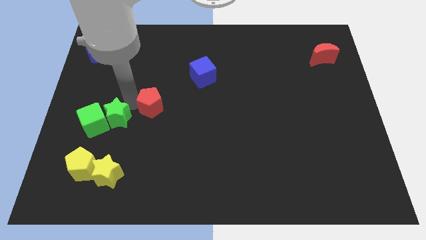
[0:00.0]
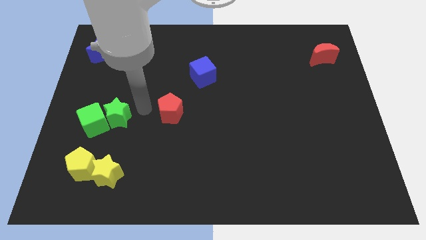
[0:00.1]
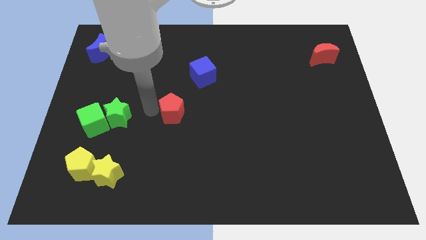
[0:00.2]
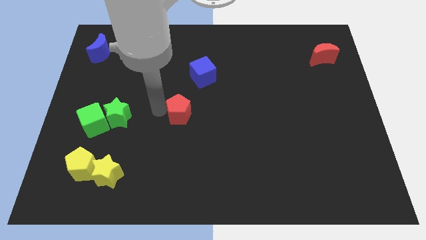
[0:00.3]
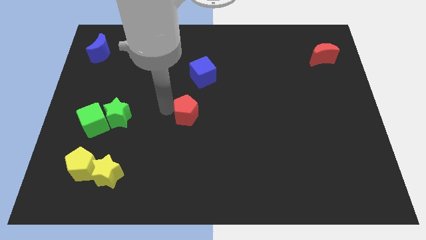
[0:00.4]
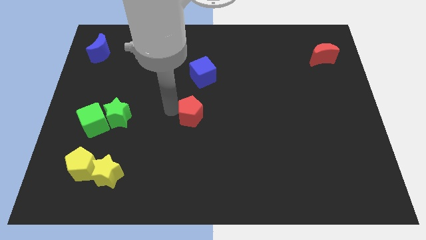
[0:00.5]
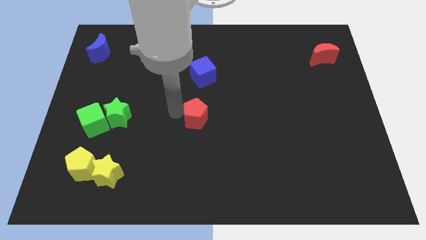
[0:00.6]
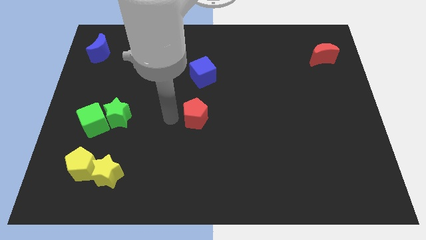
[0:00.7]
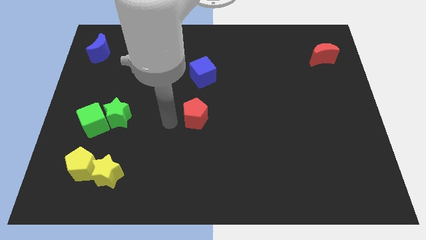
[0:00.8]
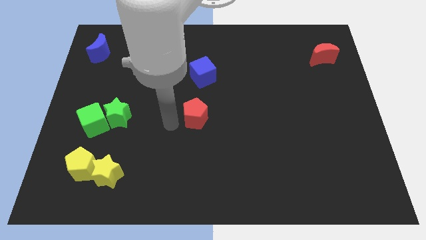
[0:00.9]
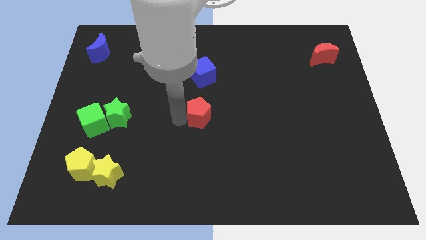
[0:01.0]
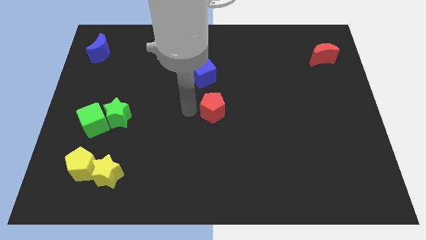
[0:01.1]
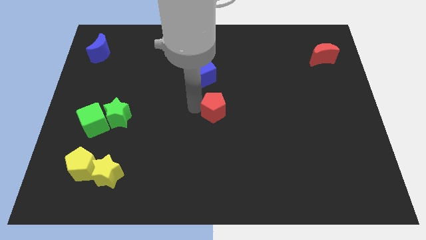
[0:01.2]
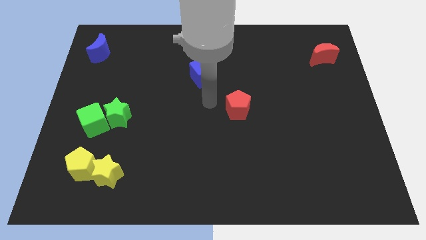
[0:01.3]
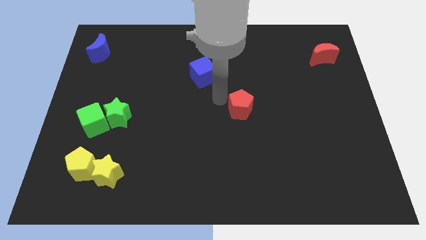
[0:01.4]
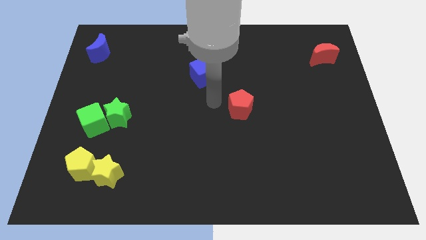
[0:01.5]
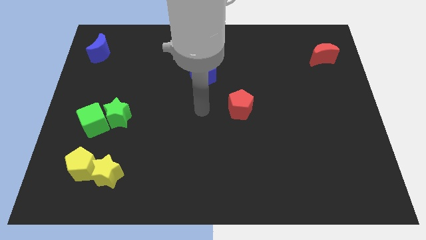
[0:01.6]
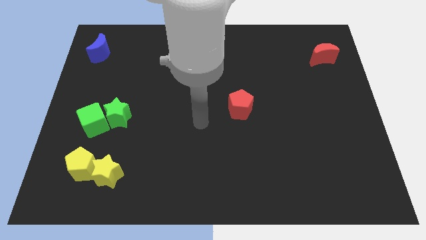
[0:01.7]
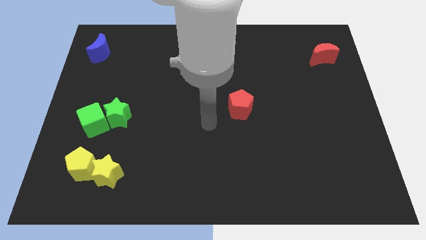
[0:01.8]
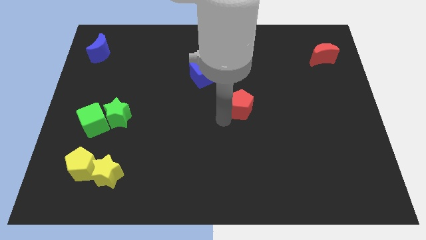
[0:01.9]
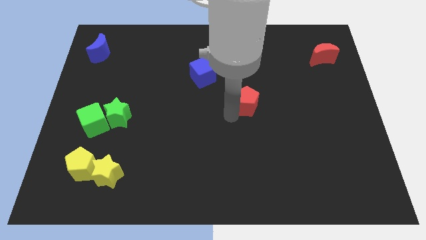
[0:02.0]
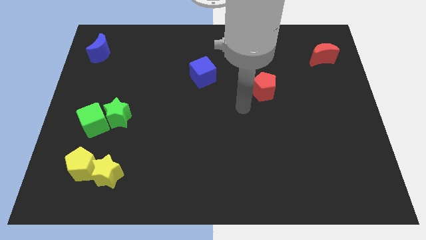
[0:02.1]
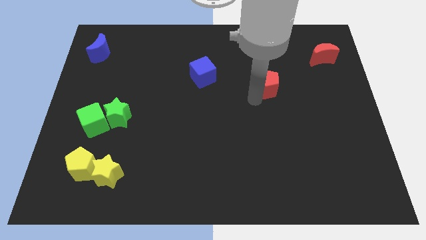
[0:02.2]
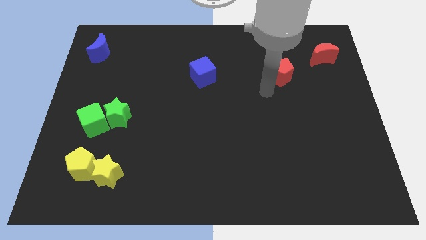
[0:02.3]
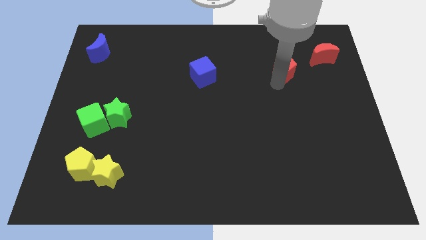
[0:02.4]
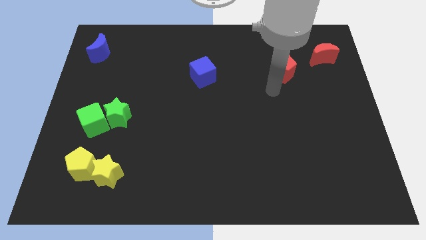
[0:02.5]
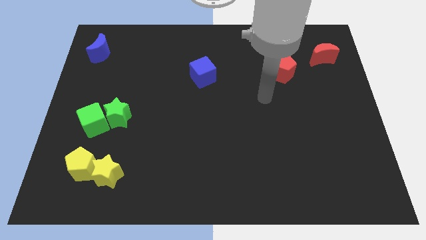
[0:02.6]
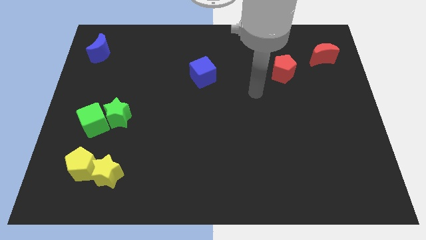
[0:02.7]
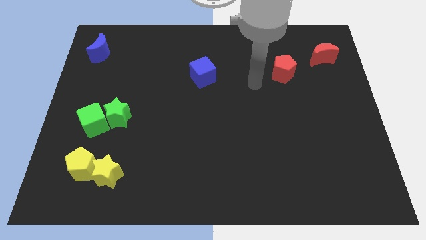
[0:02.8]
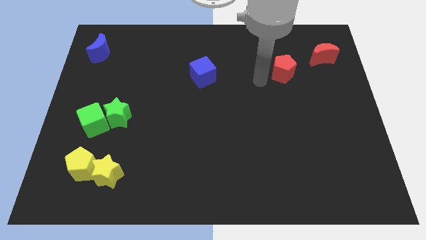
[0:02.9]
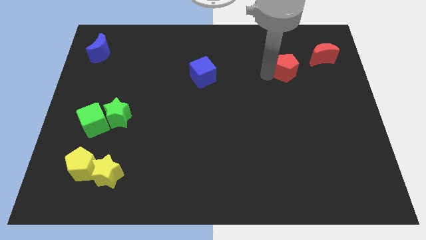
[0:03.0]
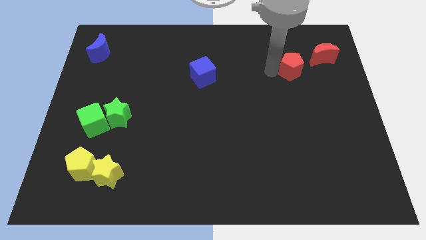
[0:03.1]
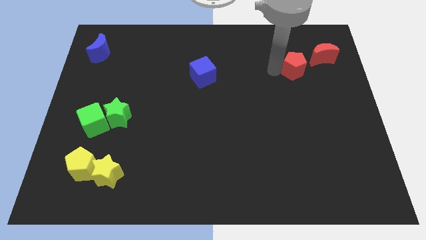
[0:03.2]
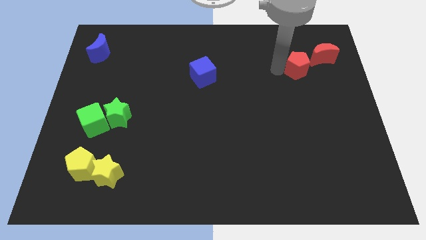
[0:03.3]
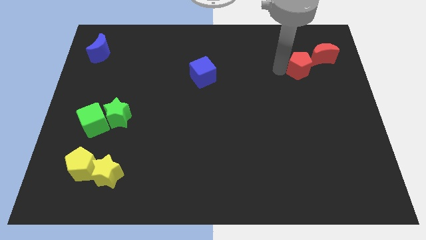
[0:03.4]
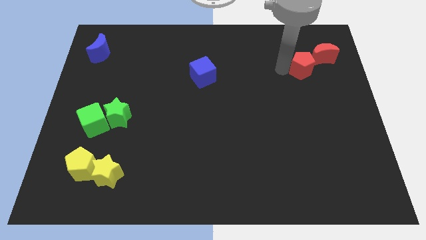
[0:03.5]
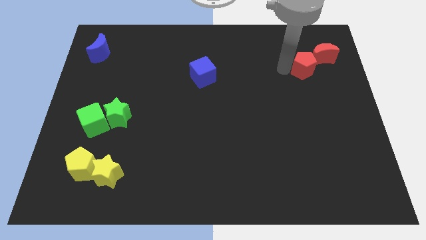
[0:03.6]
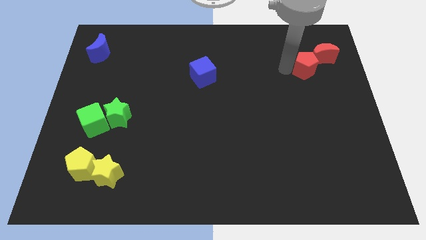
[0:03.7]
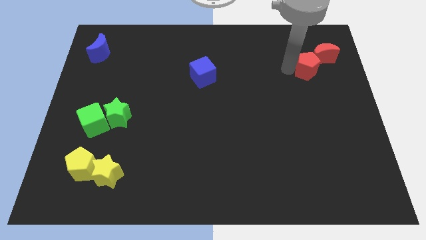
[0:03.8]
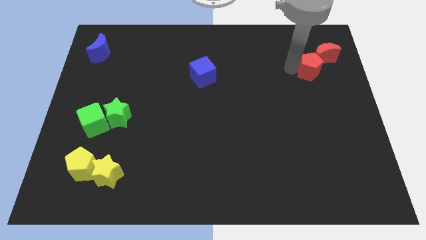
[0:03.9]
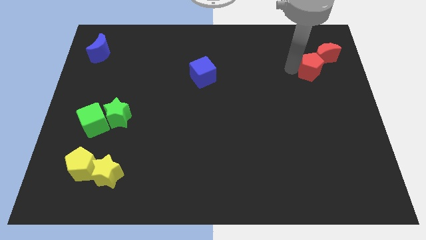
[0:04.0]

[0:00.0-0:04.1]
push the red pentagon into the left side of the red crescent

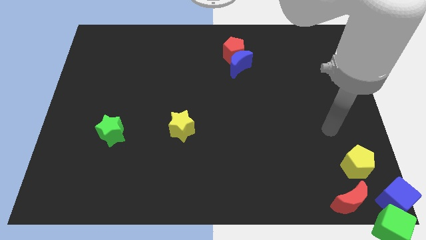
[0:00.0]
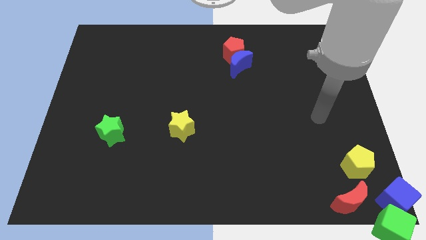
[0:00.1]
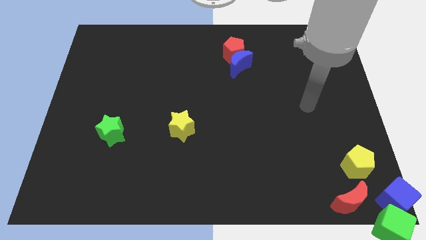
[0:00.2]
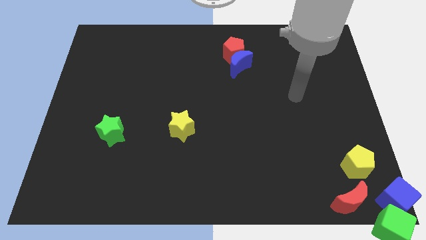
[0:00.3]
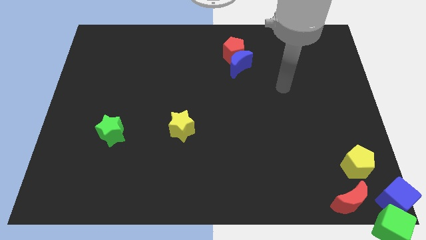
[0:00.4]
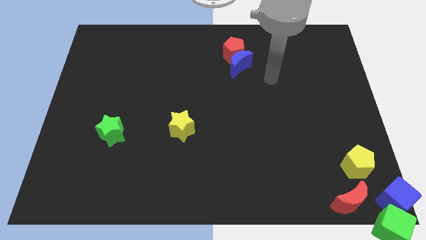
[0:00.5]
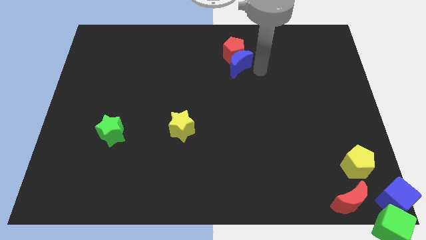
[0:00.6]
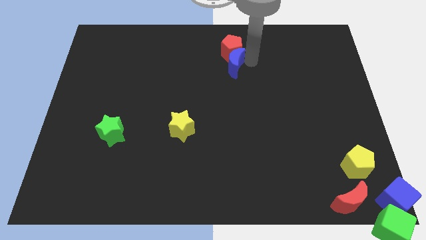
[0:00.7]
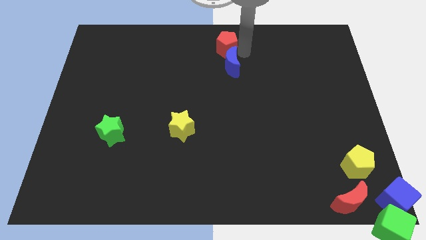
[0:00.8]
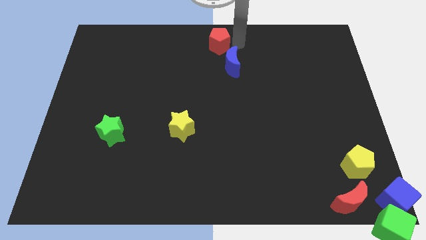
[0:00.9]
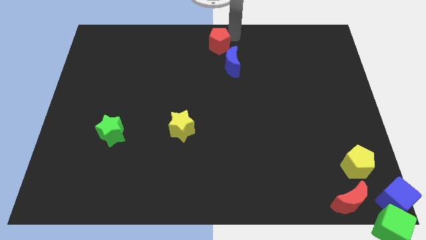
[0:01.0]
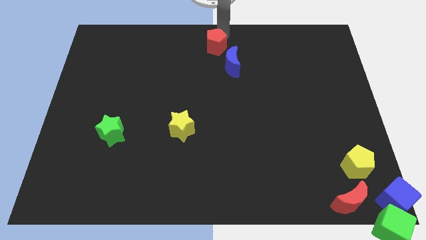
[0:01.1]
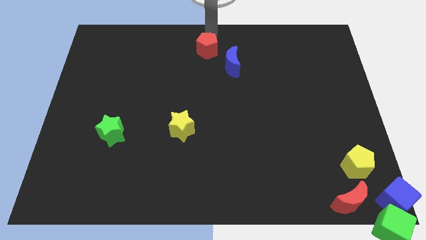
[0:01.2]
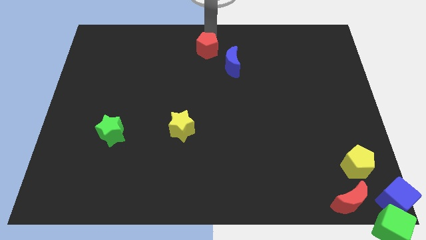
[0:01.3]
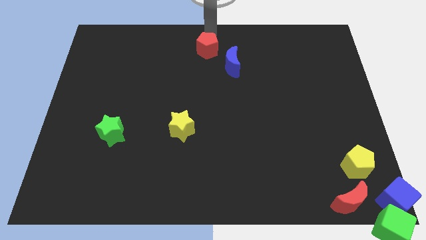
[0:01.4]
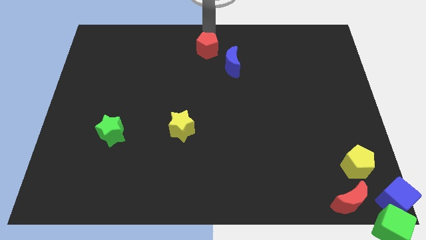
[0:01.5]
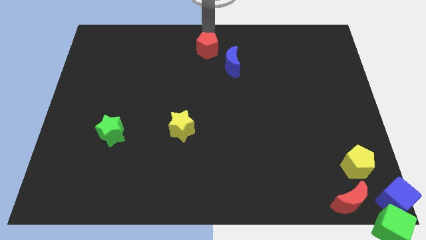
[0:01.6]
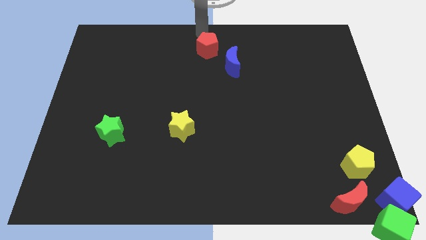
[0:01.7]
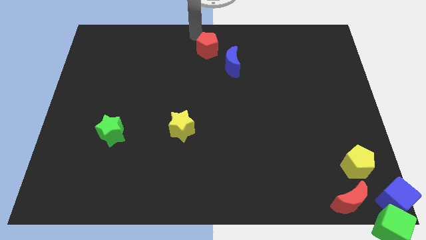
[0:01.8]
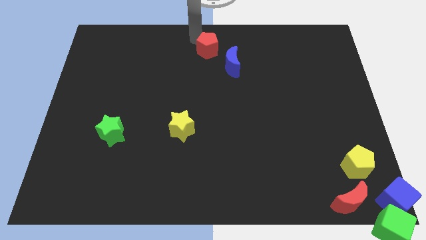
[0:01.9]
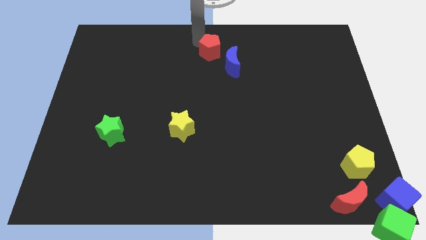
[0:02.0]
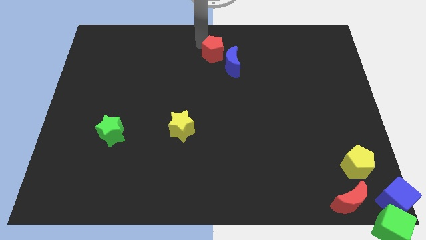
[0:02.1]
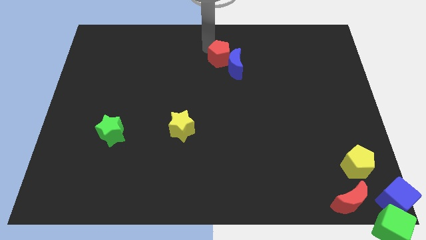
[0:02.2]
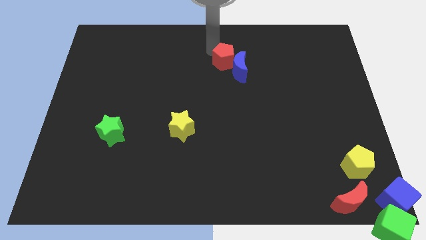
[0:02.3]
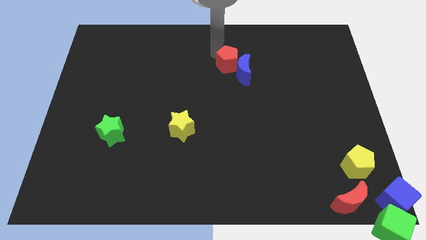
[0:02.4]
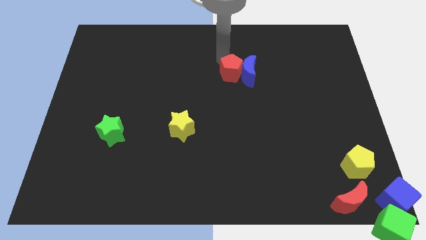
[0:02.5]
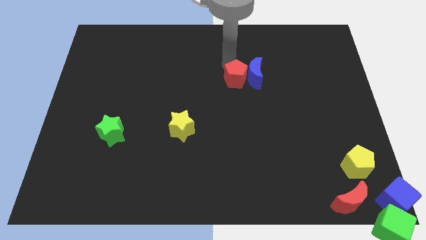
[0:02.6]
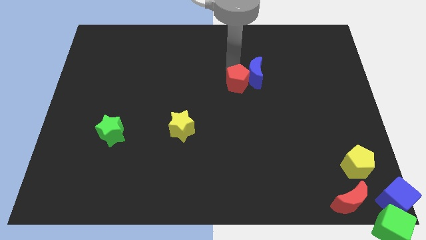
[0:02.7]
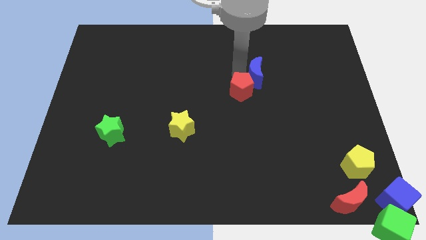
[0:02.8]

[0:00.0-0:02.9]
push the red pentagon down slightly towards the center of board

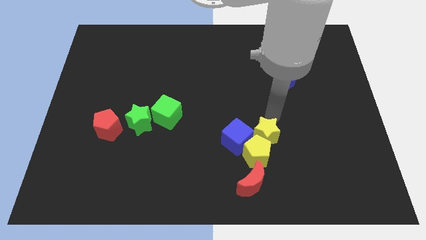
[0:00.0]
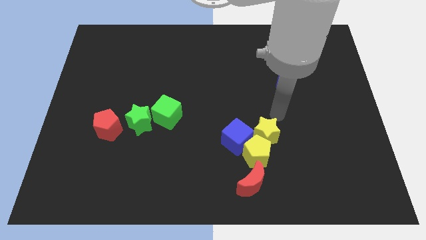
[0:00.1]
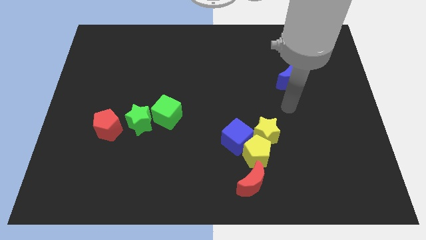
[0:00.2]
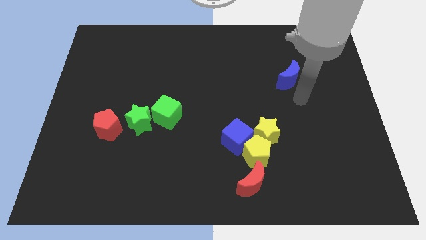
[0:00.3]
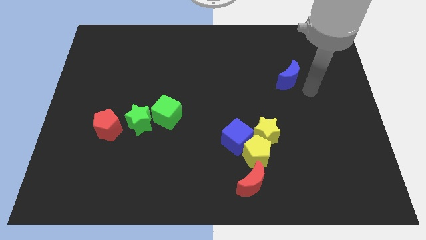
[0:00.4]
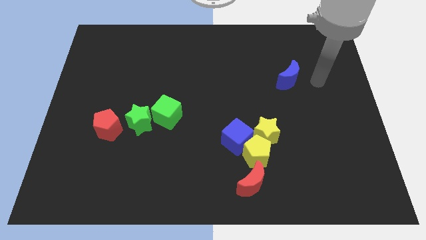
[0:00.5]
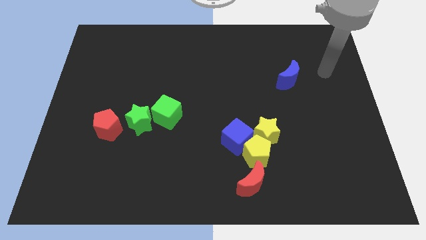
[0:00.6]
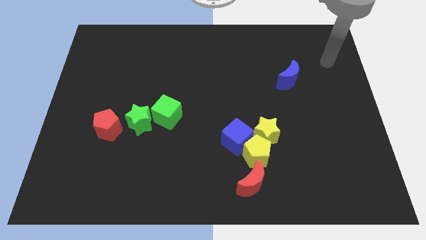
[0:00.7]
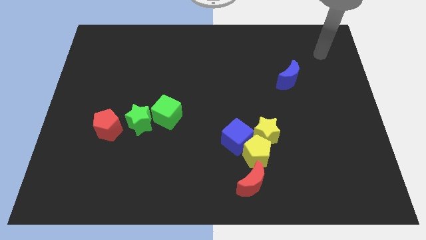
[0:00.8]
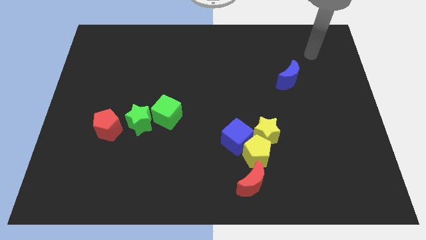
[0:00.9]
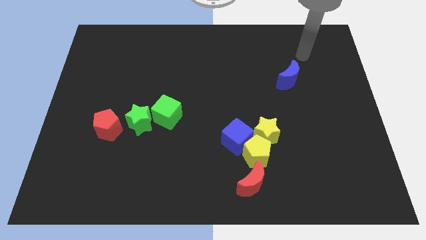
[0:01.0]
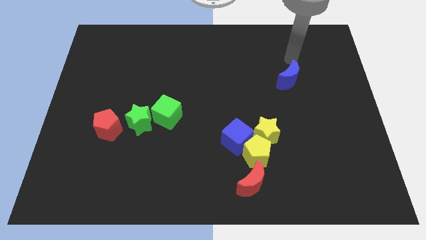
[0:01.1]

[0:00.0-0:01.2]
point your arm at the top of blue moon

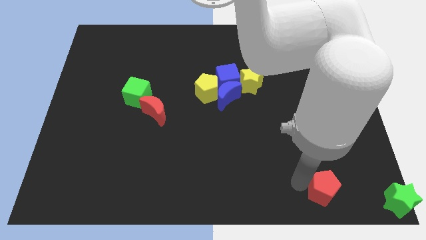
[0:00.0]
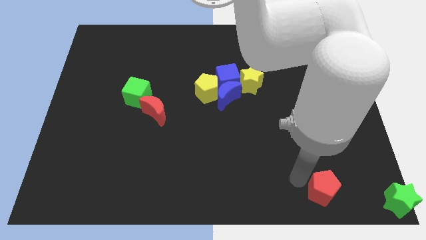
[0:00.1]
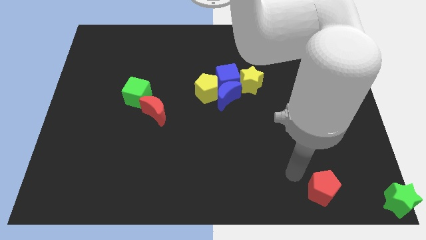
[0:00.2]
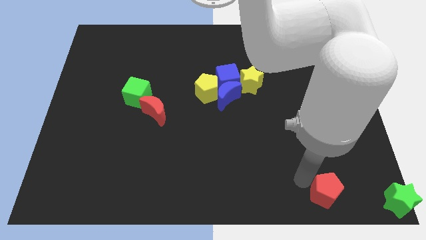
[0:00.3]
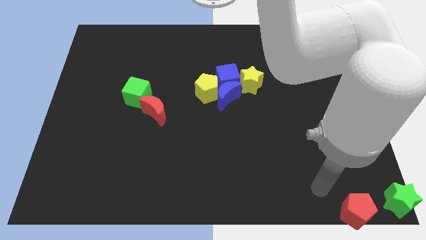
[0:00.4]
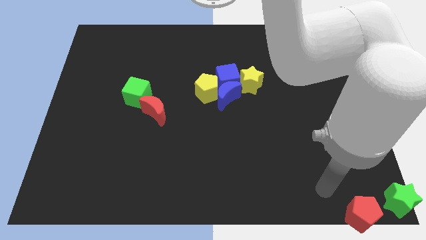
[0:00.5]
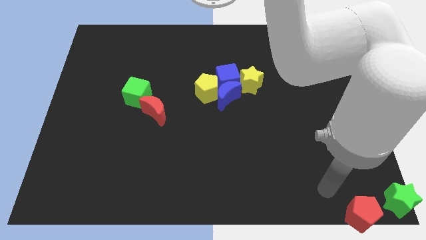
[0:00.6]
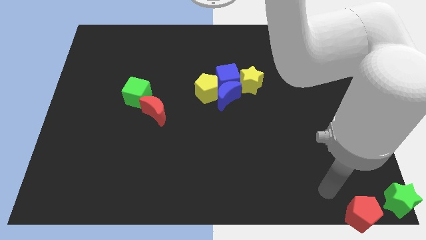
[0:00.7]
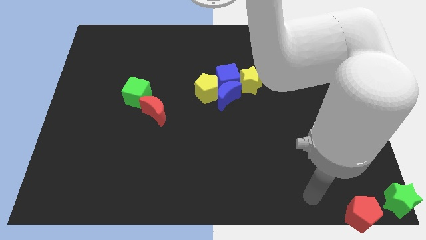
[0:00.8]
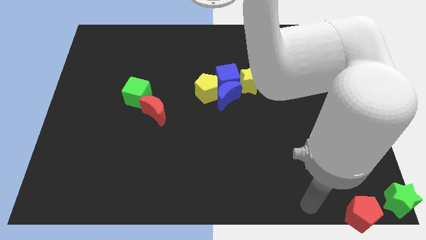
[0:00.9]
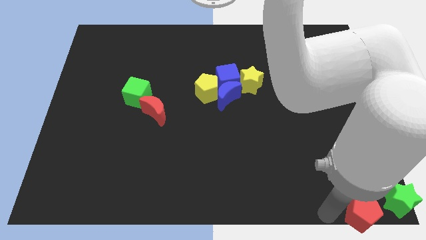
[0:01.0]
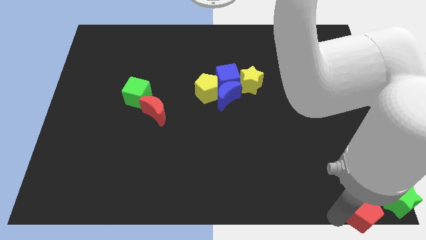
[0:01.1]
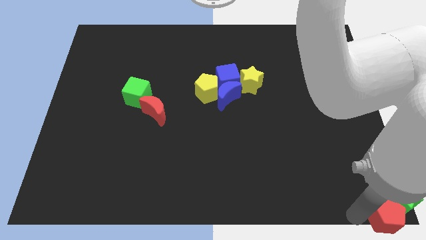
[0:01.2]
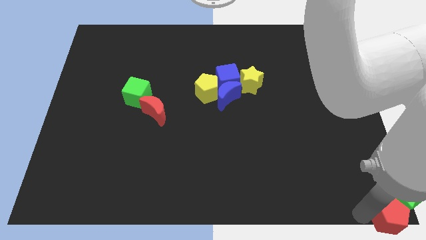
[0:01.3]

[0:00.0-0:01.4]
push the red pentagon into the green star
